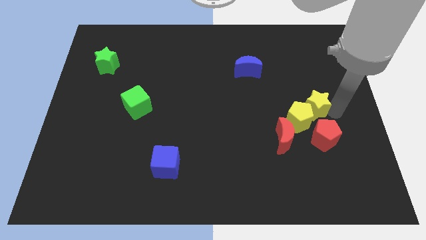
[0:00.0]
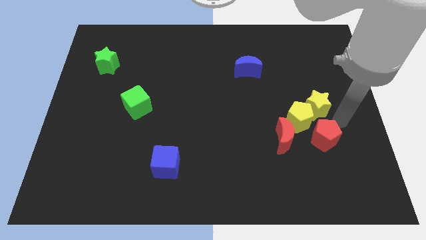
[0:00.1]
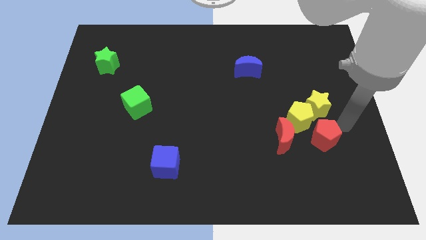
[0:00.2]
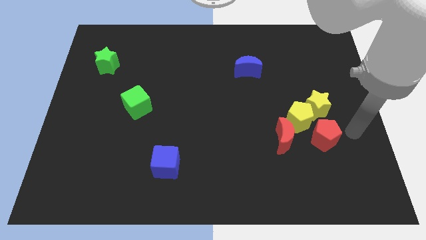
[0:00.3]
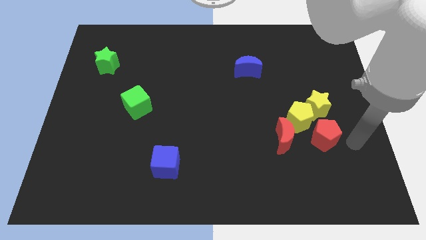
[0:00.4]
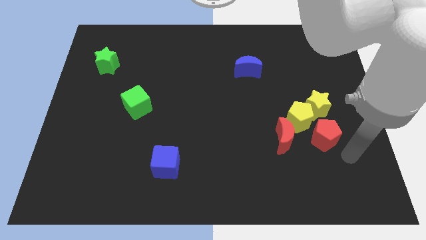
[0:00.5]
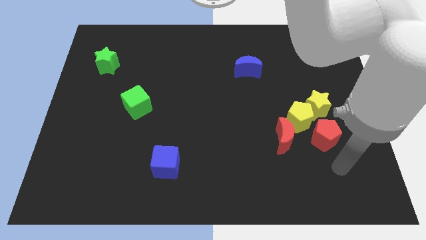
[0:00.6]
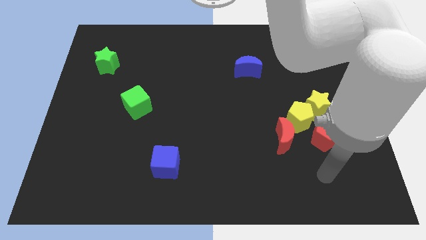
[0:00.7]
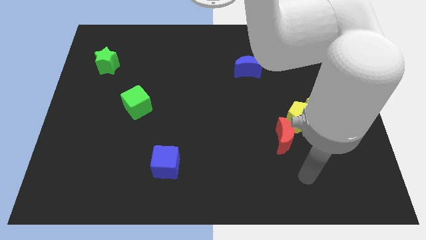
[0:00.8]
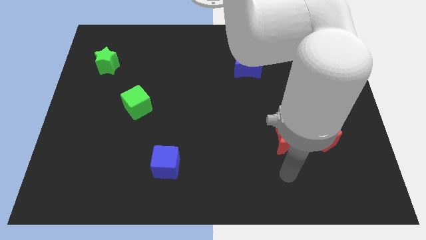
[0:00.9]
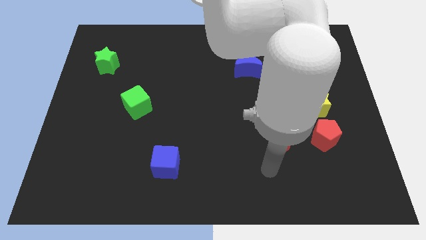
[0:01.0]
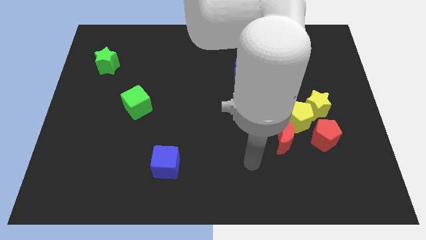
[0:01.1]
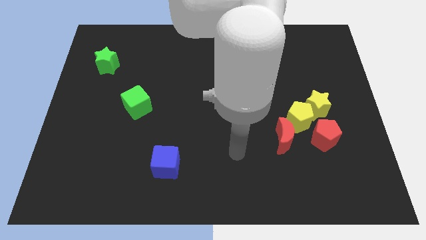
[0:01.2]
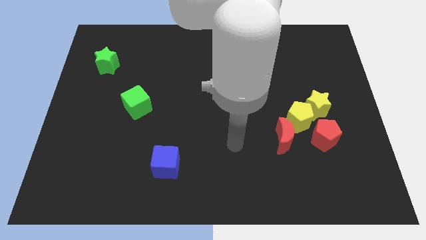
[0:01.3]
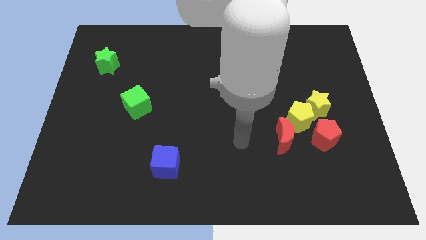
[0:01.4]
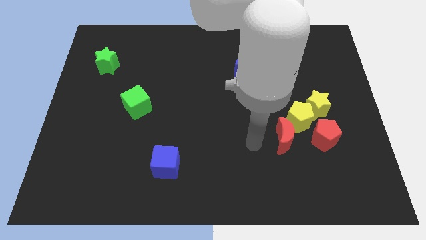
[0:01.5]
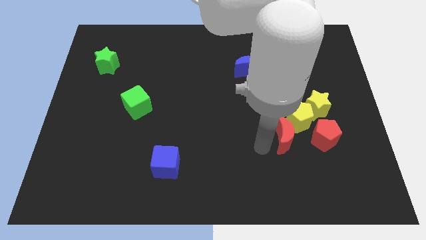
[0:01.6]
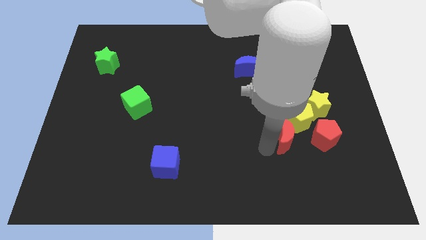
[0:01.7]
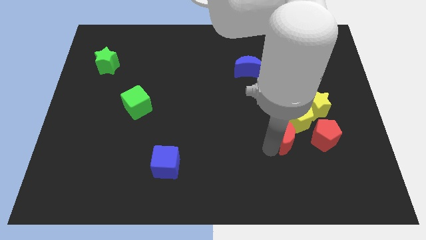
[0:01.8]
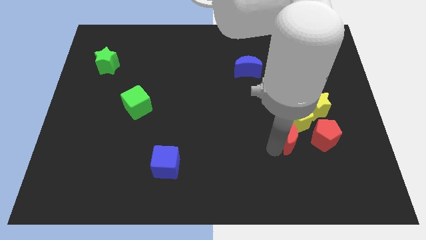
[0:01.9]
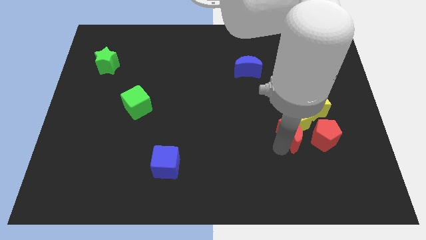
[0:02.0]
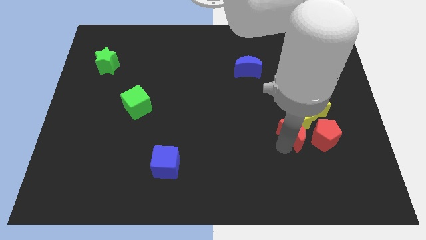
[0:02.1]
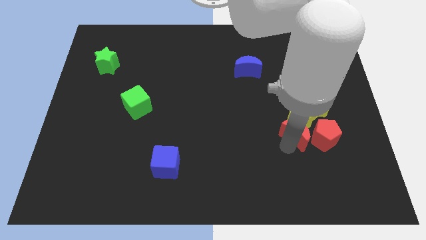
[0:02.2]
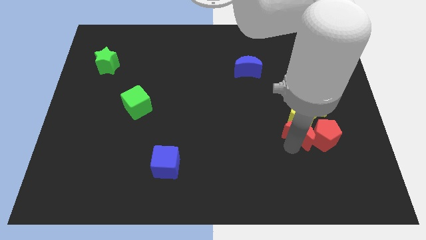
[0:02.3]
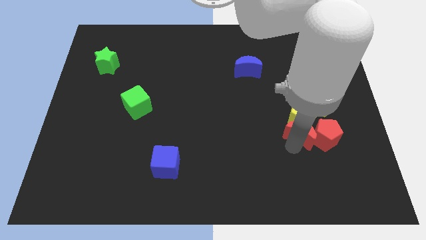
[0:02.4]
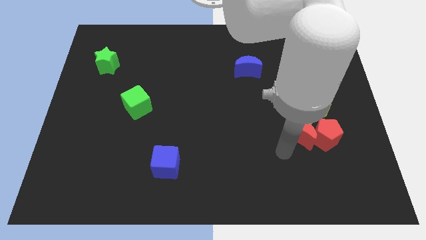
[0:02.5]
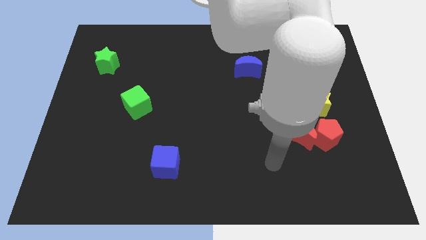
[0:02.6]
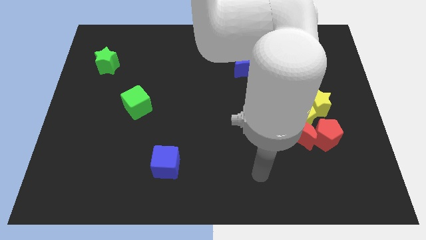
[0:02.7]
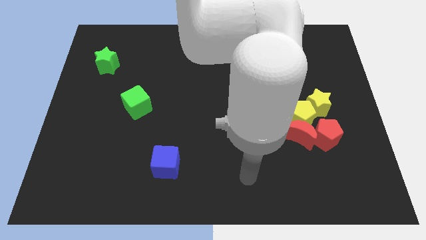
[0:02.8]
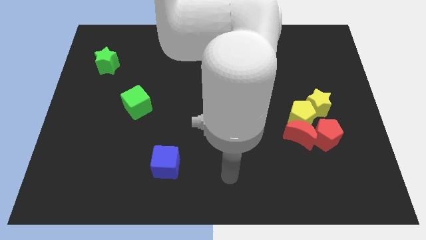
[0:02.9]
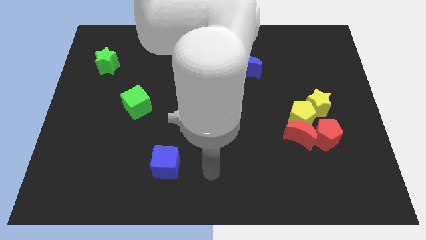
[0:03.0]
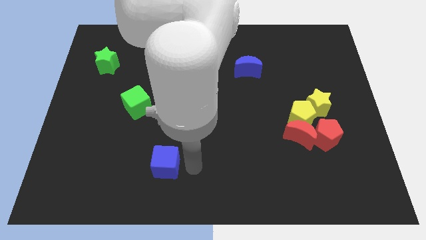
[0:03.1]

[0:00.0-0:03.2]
move the red moon to the bottom of the yellow pentagon

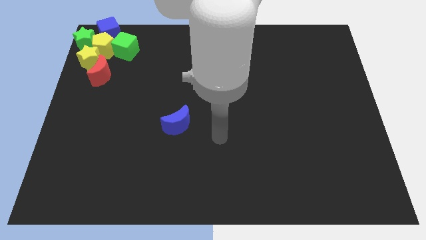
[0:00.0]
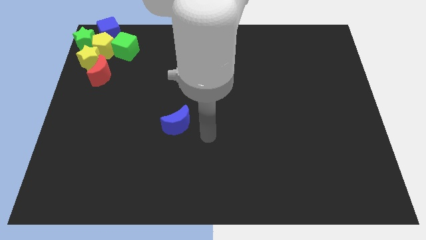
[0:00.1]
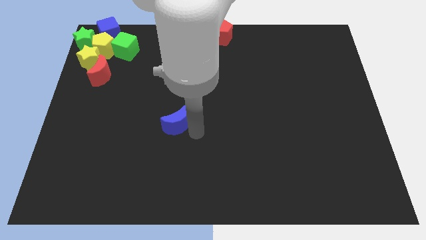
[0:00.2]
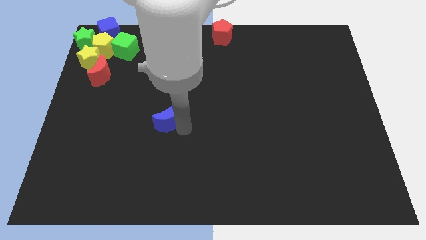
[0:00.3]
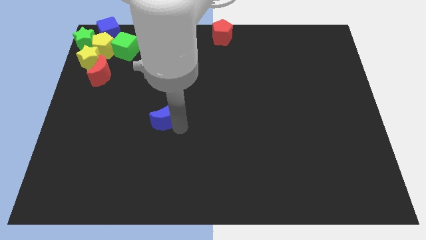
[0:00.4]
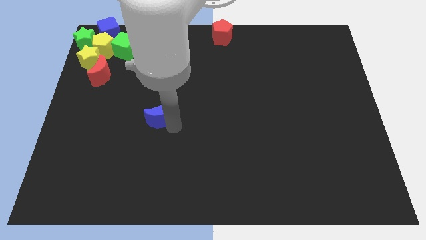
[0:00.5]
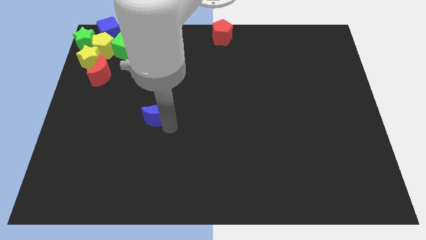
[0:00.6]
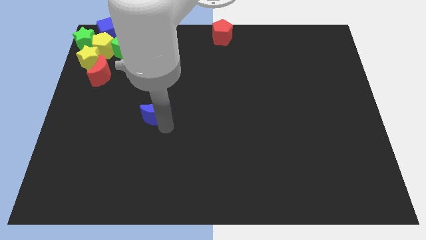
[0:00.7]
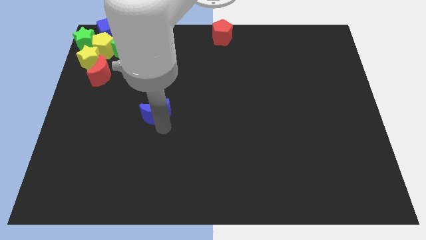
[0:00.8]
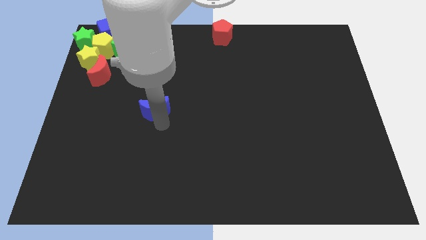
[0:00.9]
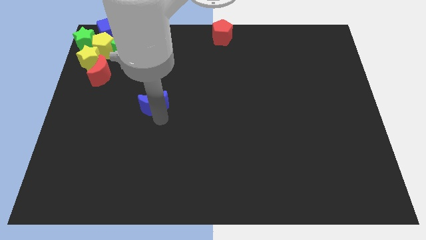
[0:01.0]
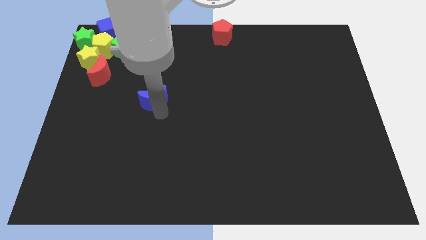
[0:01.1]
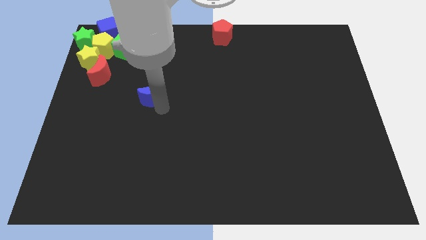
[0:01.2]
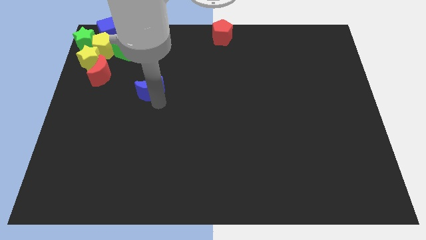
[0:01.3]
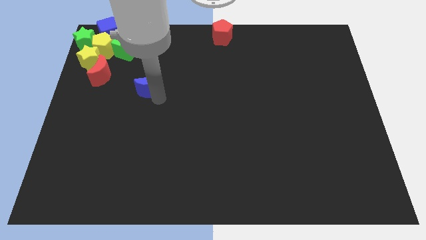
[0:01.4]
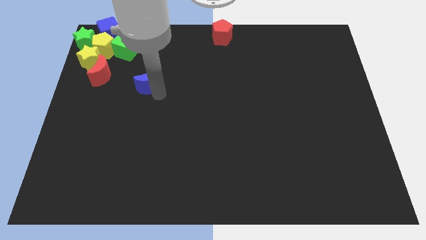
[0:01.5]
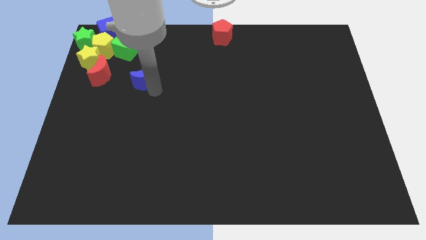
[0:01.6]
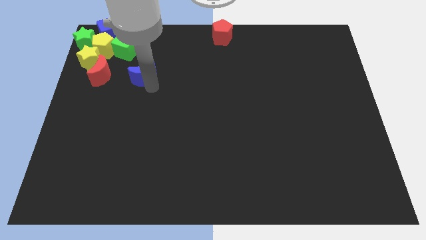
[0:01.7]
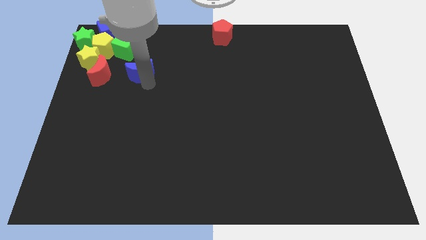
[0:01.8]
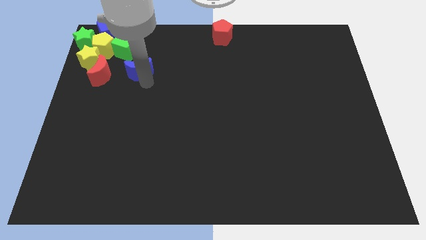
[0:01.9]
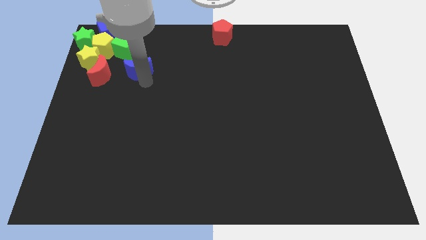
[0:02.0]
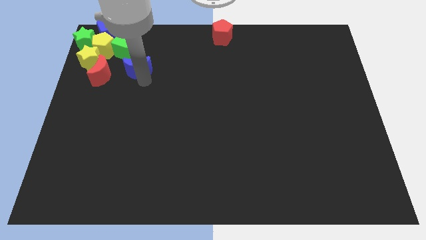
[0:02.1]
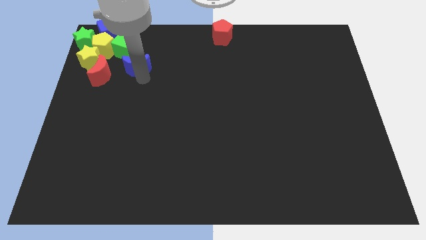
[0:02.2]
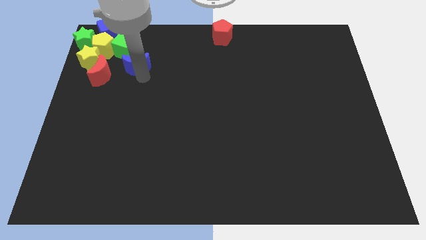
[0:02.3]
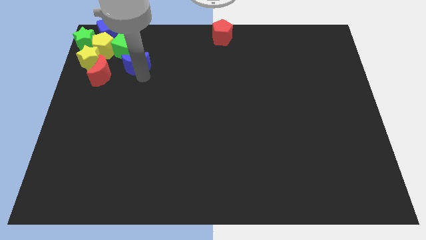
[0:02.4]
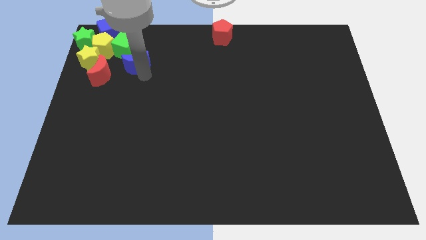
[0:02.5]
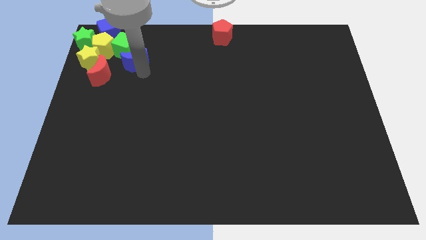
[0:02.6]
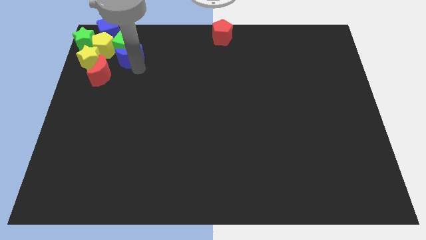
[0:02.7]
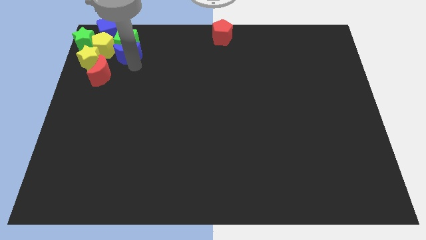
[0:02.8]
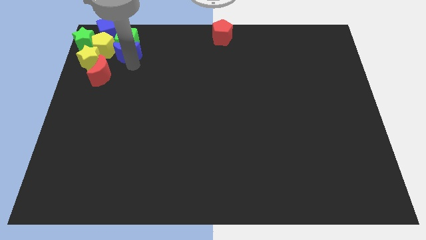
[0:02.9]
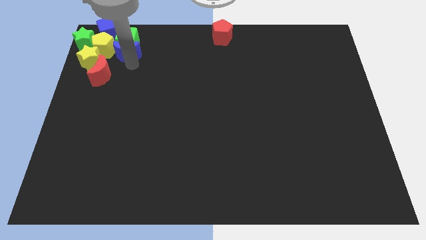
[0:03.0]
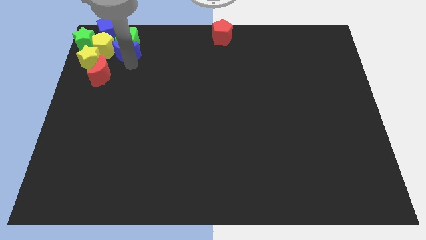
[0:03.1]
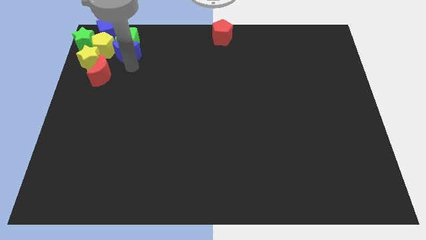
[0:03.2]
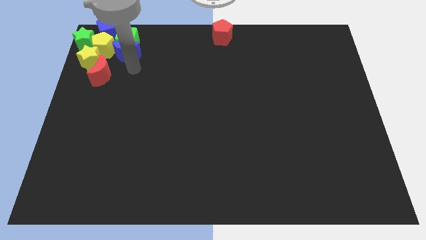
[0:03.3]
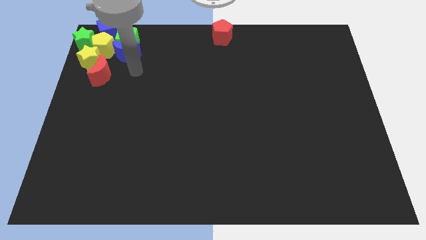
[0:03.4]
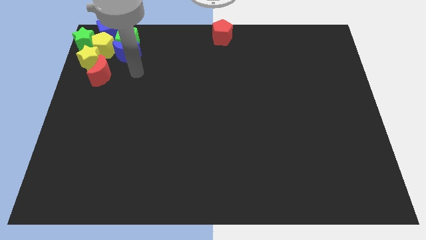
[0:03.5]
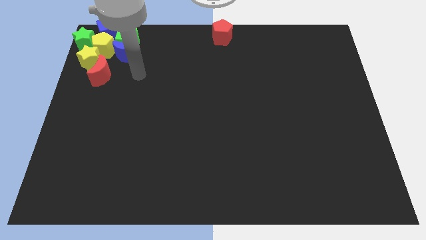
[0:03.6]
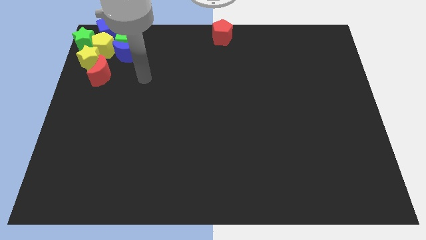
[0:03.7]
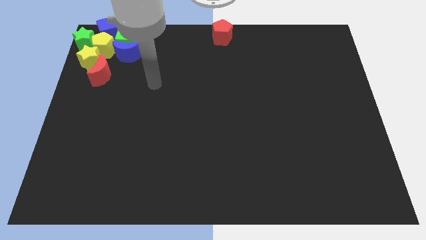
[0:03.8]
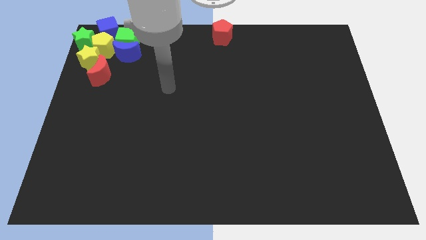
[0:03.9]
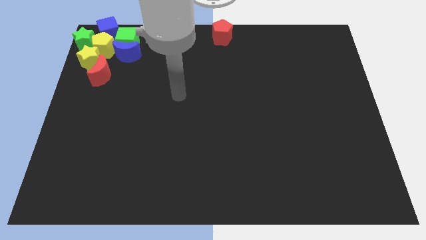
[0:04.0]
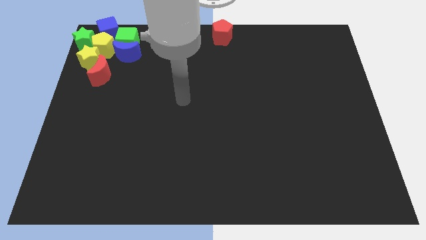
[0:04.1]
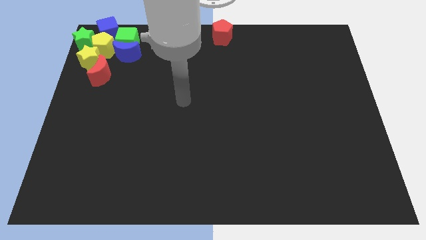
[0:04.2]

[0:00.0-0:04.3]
push blue moon into the green cube

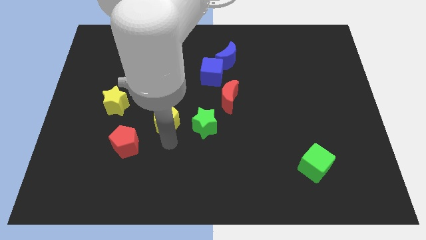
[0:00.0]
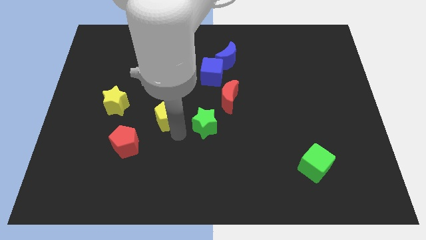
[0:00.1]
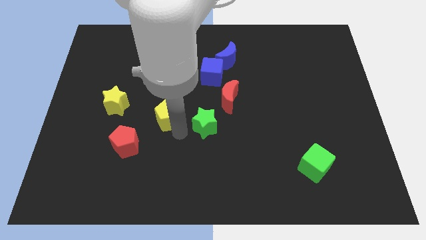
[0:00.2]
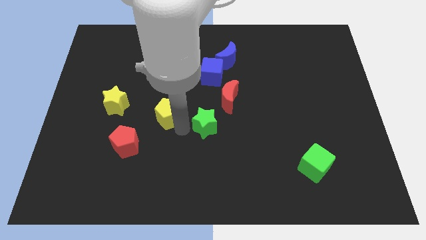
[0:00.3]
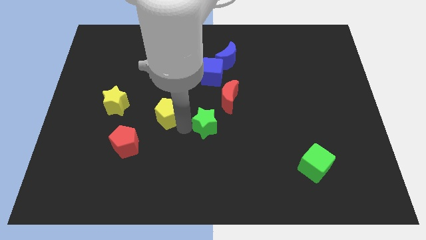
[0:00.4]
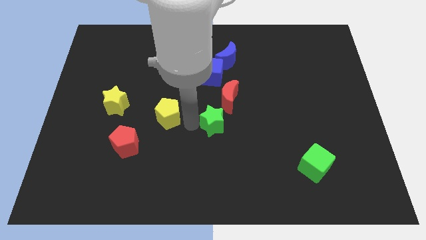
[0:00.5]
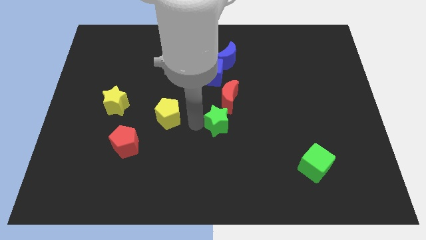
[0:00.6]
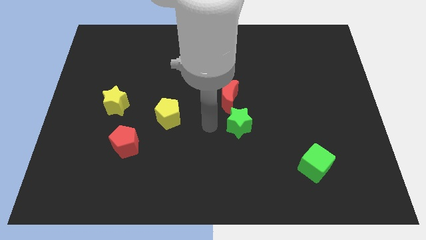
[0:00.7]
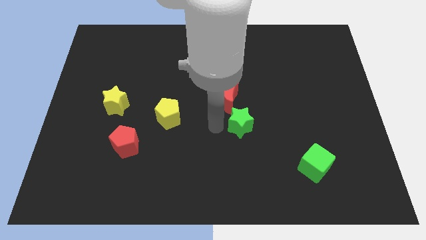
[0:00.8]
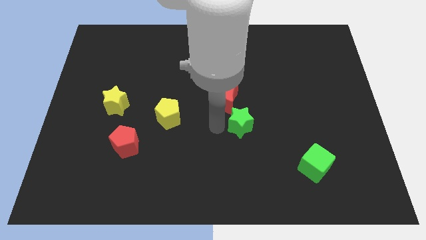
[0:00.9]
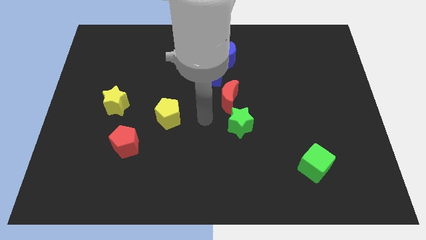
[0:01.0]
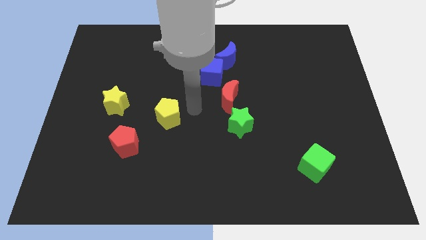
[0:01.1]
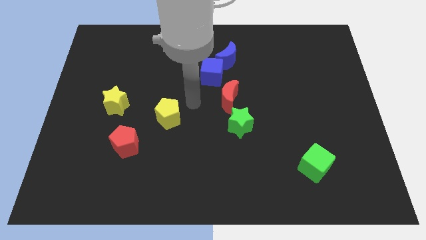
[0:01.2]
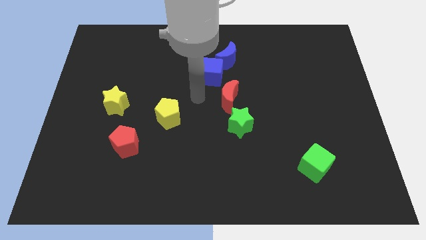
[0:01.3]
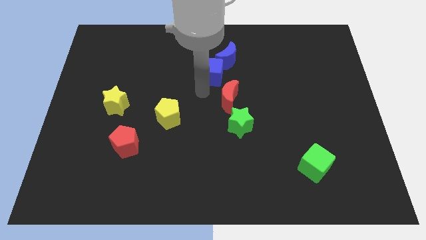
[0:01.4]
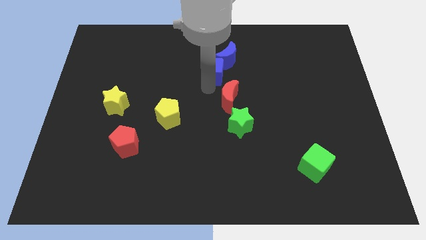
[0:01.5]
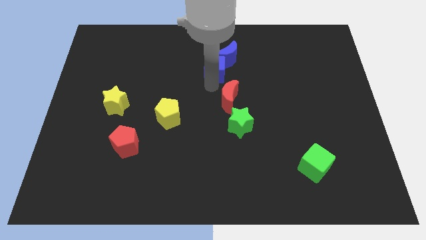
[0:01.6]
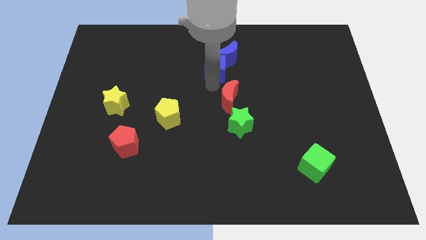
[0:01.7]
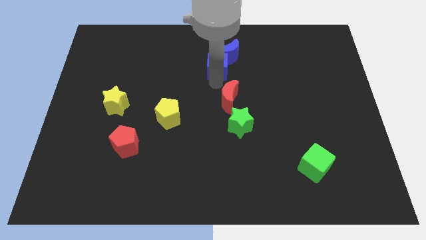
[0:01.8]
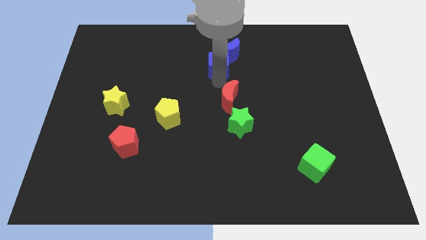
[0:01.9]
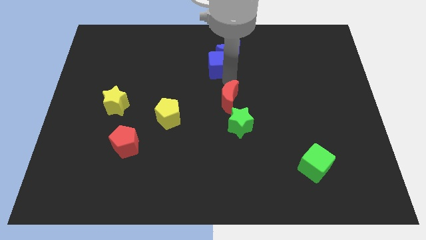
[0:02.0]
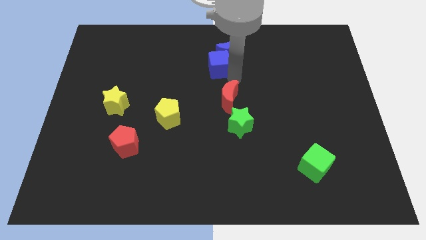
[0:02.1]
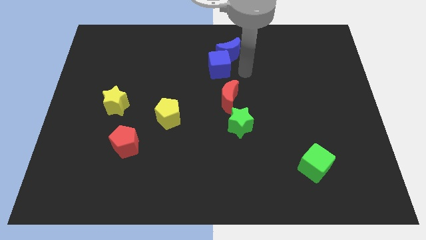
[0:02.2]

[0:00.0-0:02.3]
push the green star to left and blue cube into blue moon
